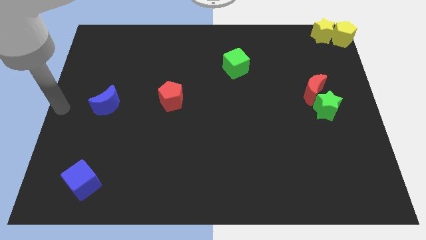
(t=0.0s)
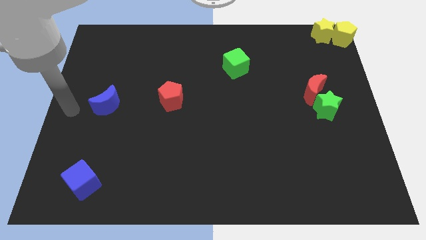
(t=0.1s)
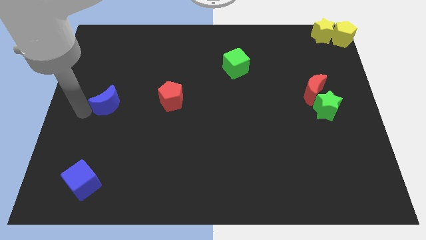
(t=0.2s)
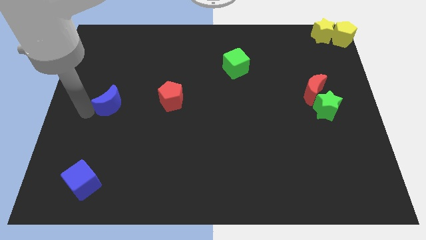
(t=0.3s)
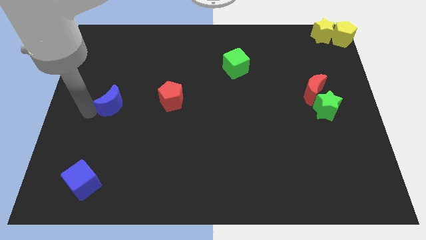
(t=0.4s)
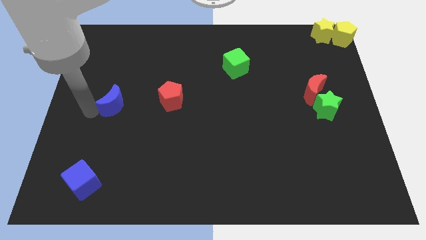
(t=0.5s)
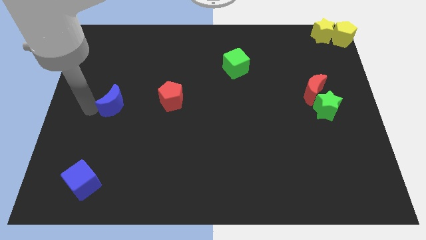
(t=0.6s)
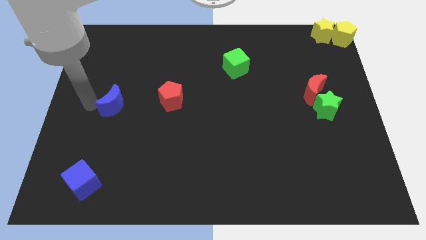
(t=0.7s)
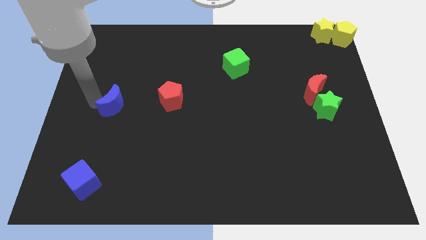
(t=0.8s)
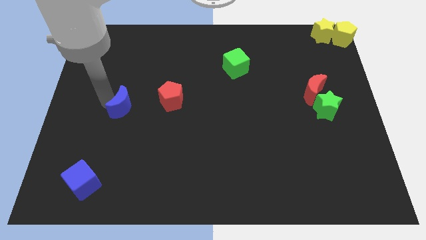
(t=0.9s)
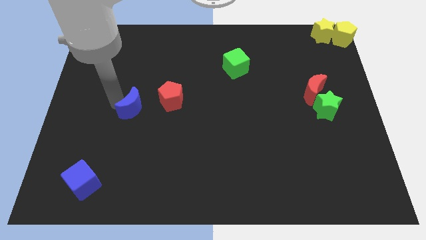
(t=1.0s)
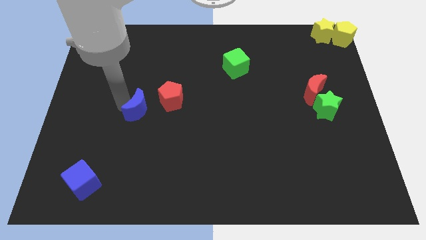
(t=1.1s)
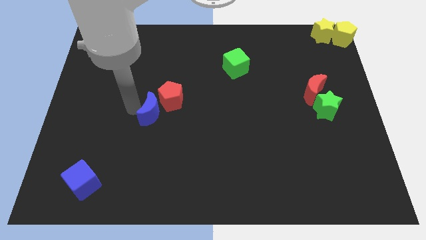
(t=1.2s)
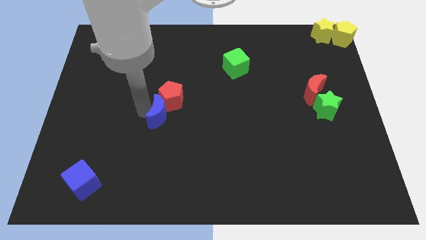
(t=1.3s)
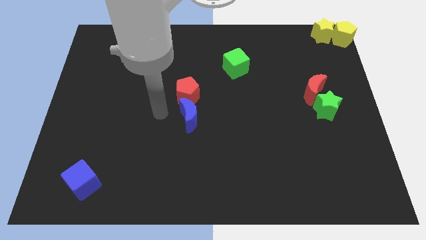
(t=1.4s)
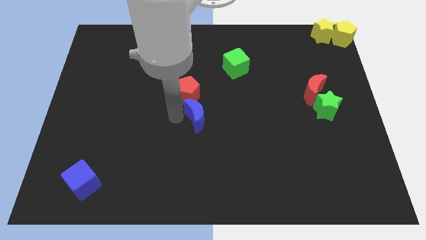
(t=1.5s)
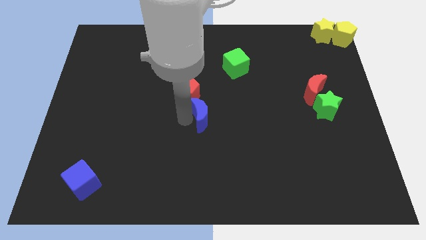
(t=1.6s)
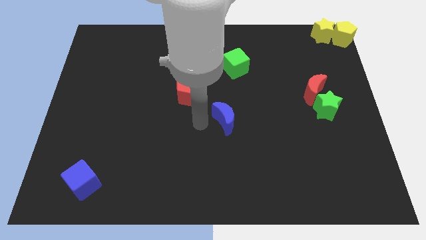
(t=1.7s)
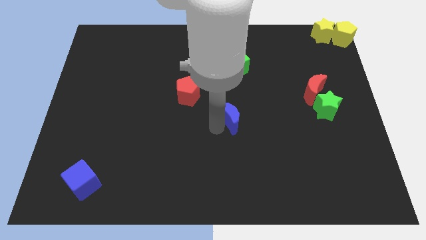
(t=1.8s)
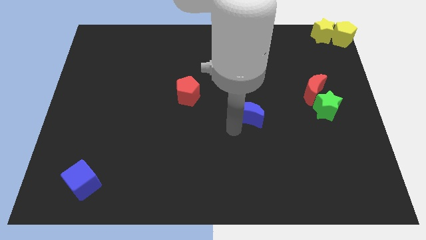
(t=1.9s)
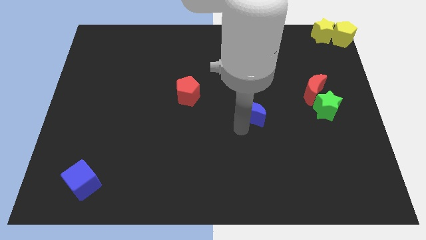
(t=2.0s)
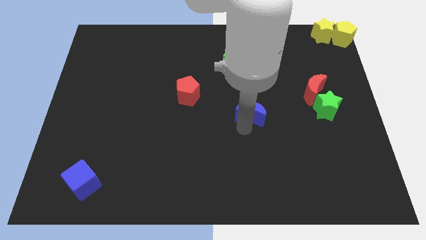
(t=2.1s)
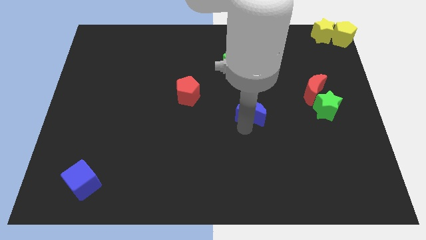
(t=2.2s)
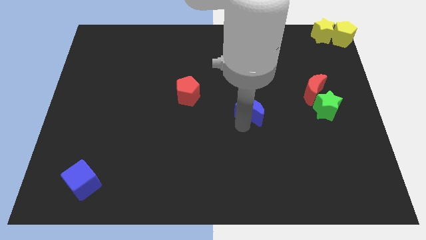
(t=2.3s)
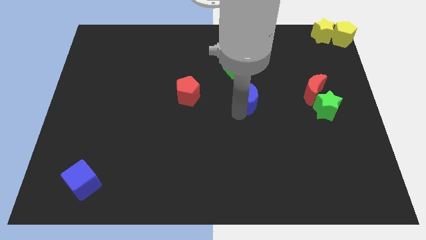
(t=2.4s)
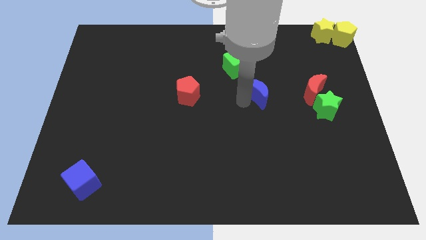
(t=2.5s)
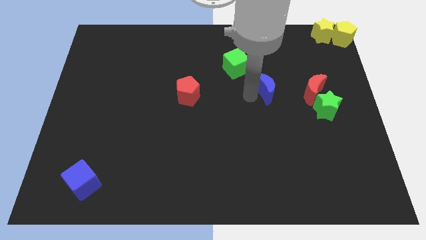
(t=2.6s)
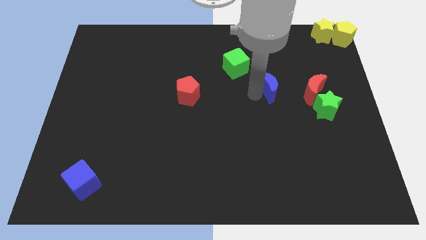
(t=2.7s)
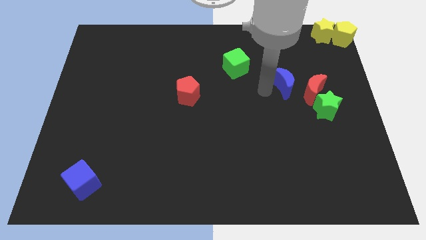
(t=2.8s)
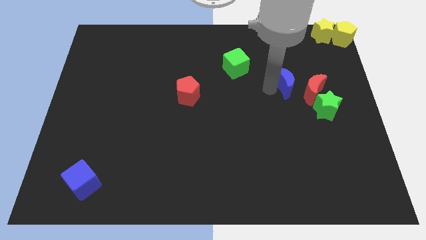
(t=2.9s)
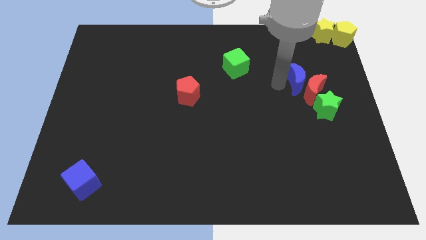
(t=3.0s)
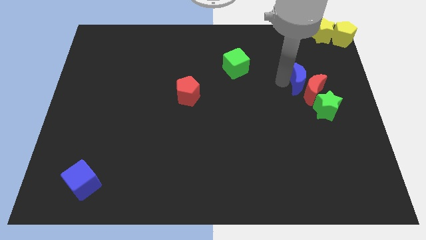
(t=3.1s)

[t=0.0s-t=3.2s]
place the blue moon left to the red moon

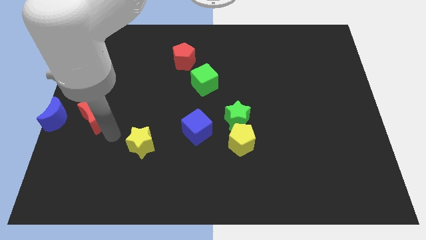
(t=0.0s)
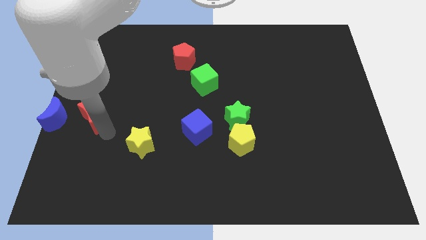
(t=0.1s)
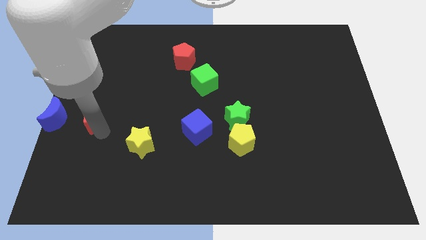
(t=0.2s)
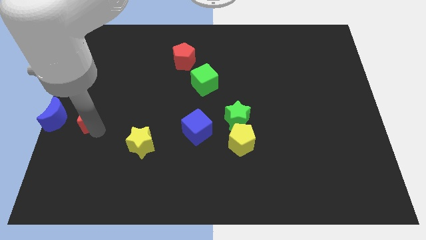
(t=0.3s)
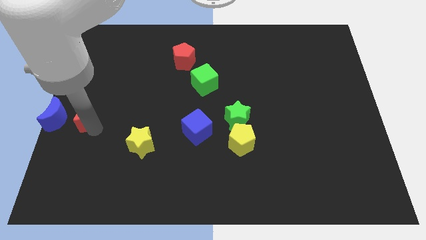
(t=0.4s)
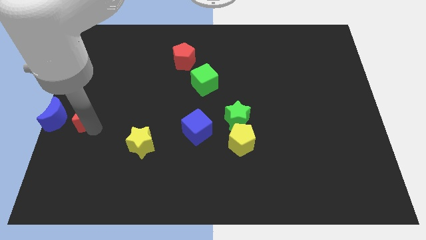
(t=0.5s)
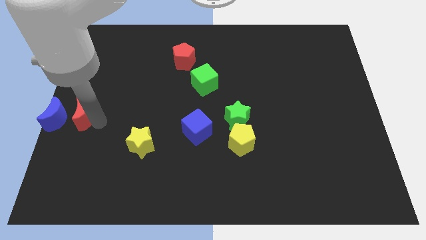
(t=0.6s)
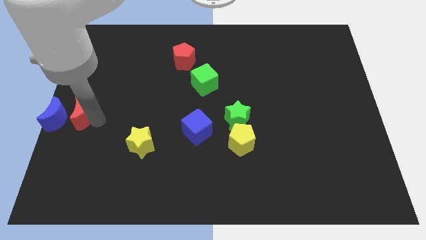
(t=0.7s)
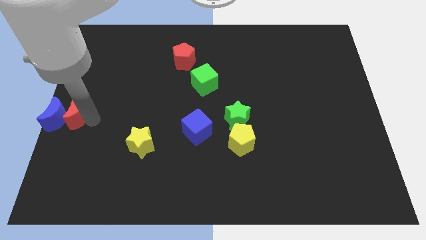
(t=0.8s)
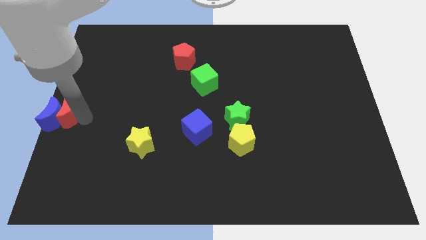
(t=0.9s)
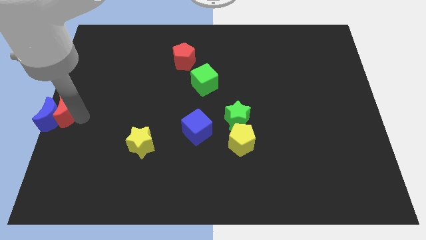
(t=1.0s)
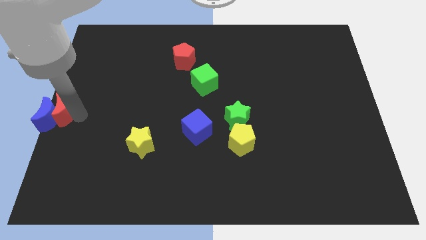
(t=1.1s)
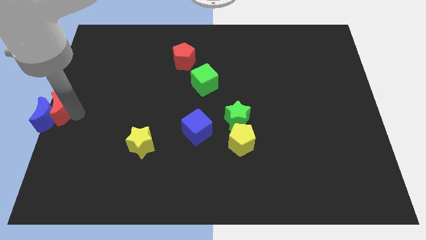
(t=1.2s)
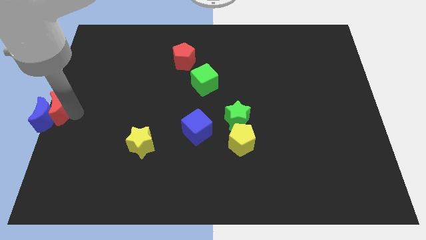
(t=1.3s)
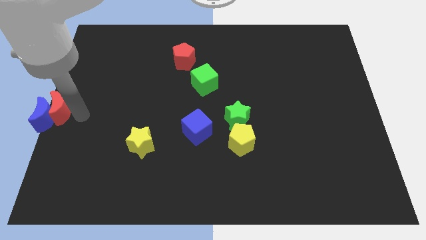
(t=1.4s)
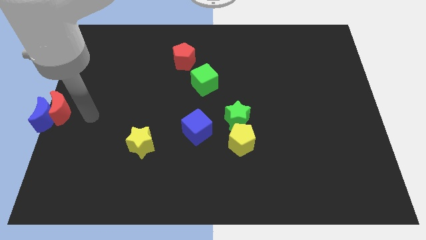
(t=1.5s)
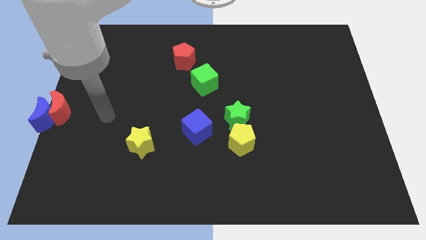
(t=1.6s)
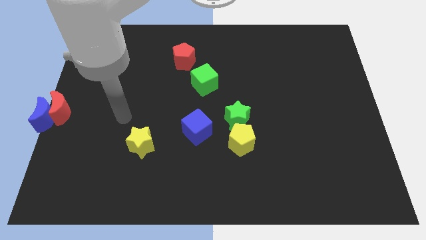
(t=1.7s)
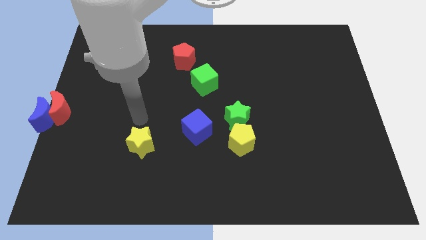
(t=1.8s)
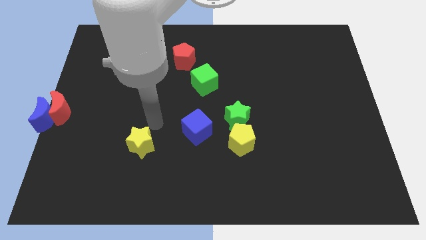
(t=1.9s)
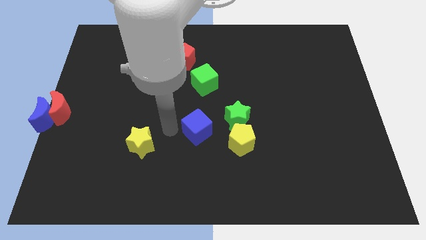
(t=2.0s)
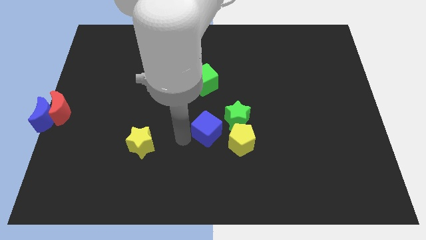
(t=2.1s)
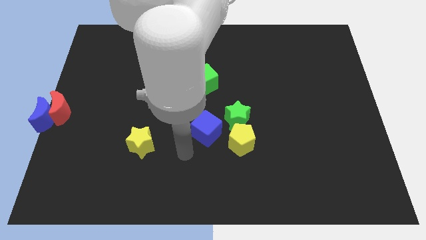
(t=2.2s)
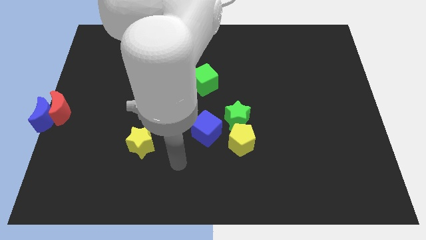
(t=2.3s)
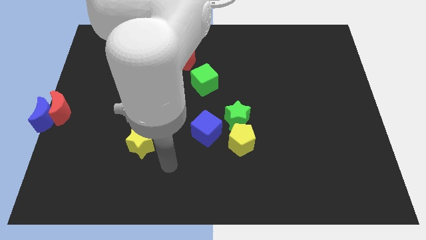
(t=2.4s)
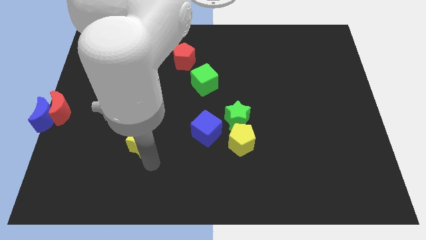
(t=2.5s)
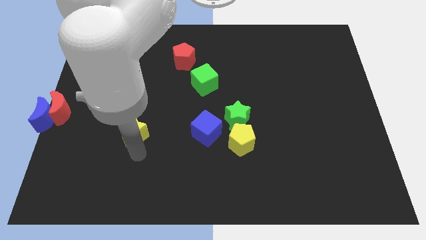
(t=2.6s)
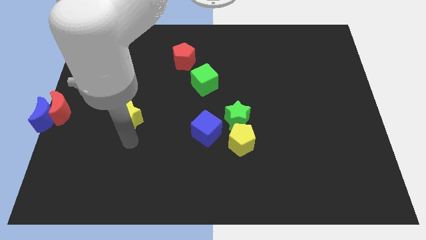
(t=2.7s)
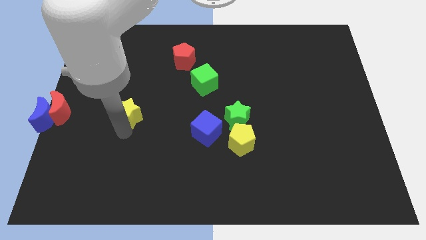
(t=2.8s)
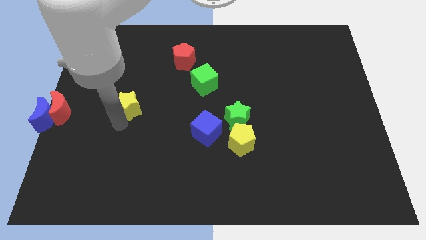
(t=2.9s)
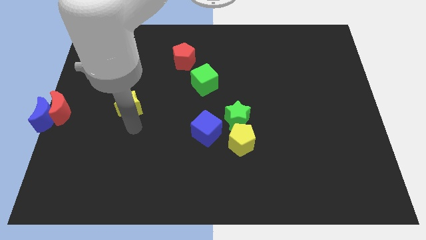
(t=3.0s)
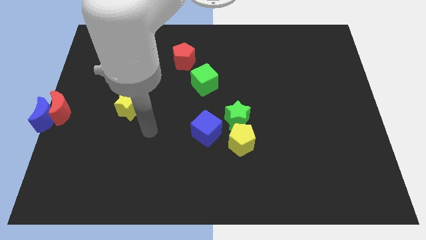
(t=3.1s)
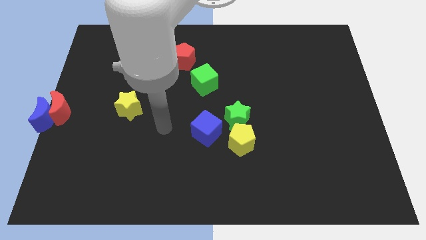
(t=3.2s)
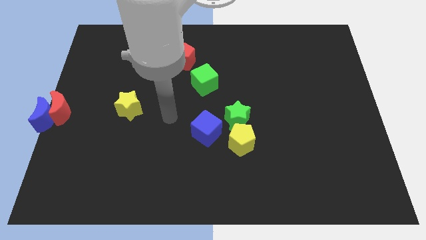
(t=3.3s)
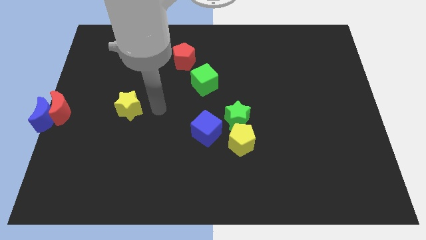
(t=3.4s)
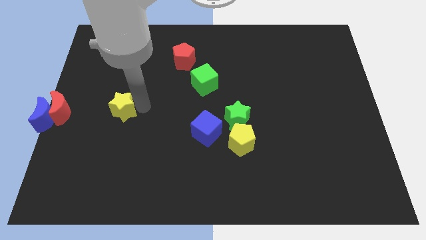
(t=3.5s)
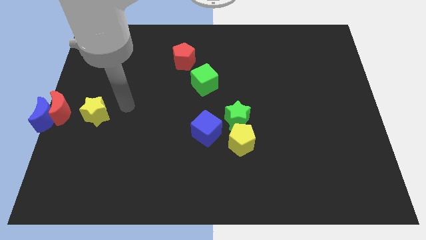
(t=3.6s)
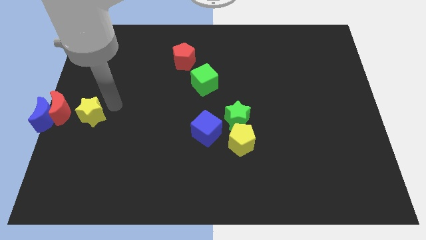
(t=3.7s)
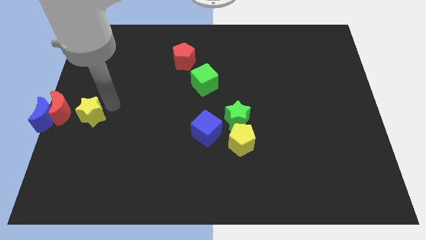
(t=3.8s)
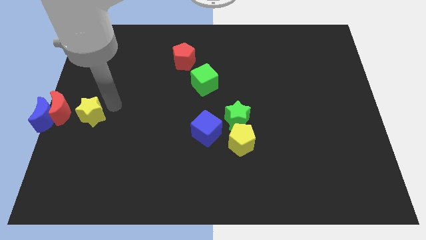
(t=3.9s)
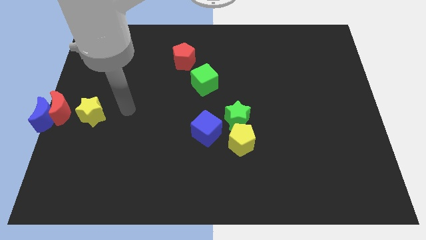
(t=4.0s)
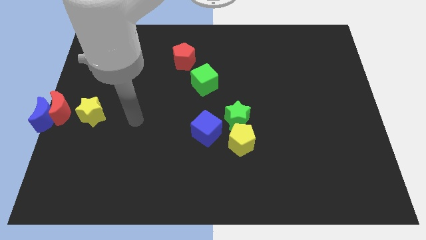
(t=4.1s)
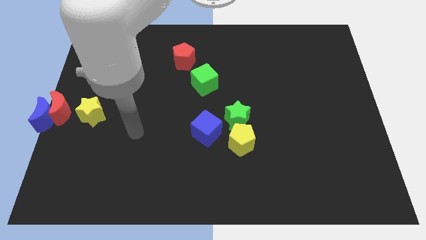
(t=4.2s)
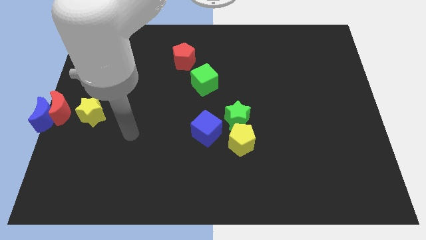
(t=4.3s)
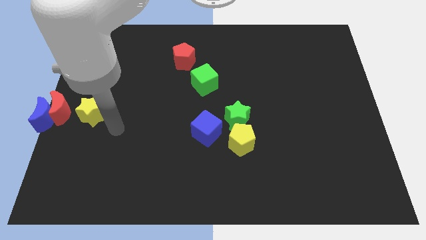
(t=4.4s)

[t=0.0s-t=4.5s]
push the red crescent into the blue crescent

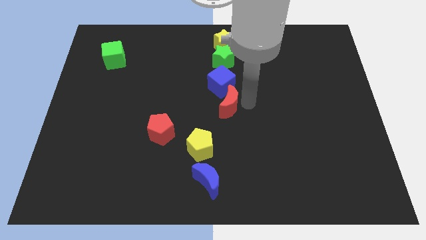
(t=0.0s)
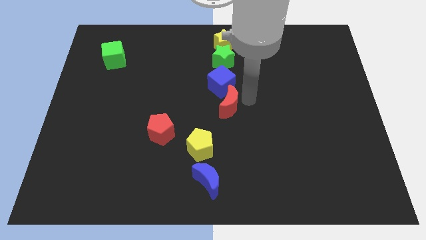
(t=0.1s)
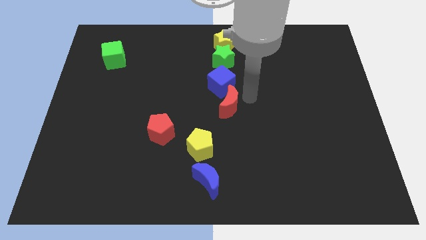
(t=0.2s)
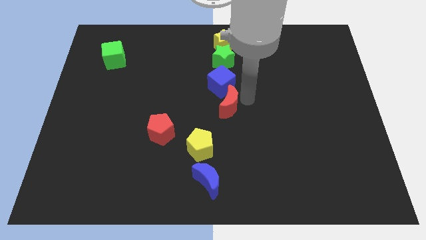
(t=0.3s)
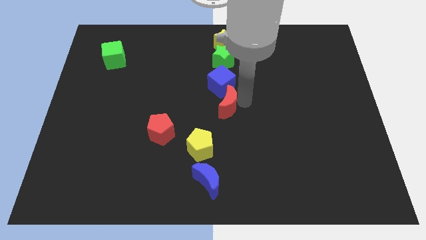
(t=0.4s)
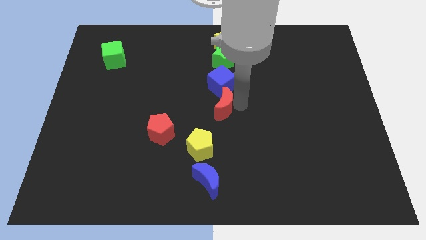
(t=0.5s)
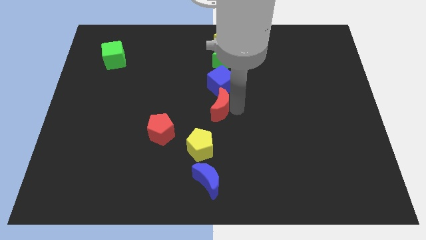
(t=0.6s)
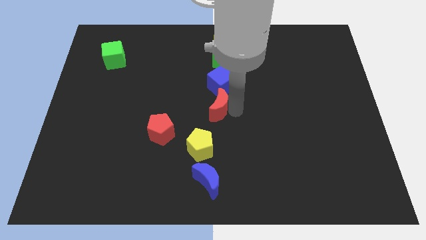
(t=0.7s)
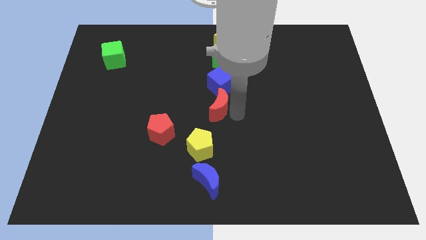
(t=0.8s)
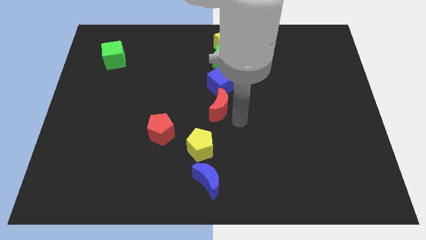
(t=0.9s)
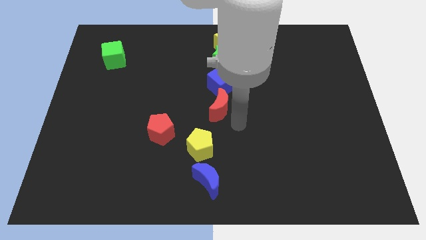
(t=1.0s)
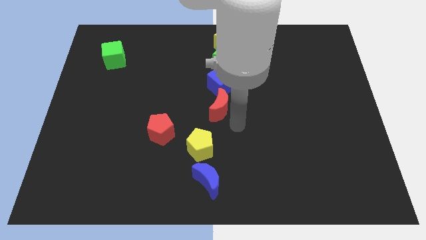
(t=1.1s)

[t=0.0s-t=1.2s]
slightly move the red moon left
